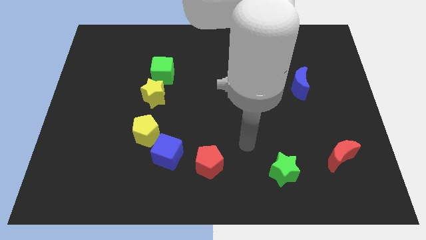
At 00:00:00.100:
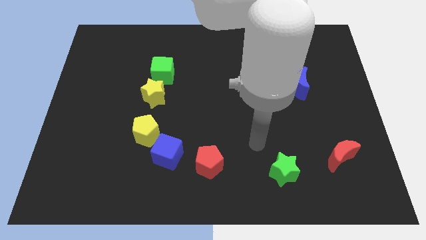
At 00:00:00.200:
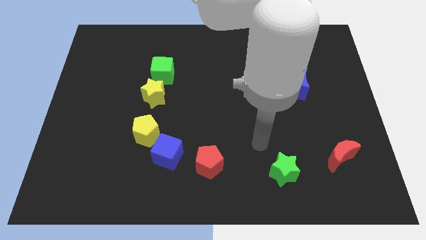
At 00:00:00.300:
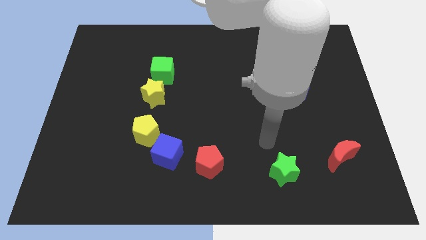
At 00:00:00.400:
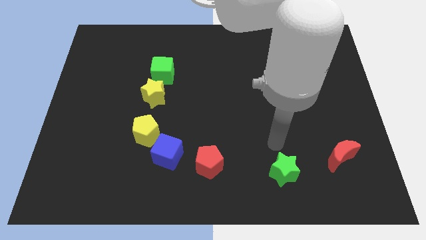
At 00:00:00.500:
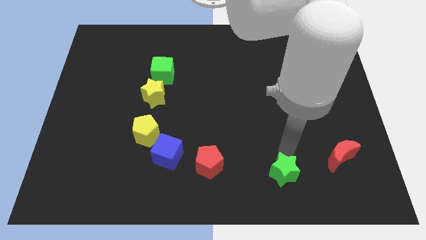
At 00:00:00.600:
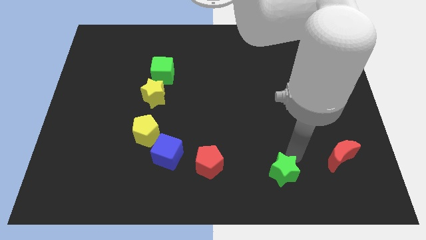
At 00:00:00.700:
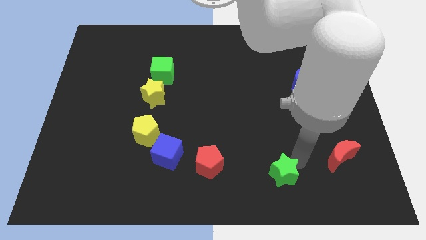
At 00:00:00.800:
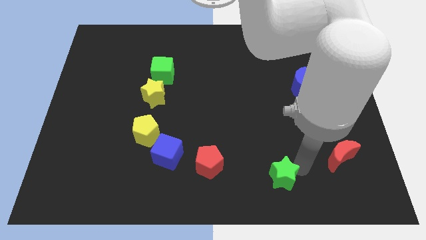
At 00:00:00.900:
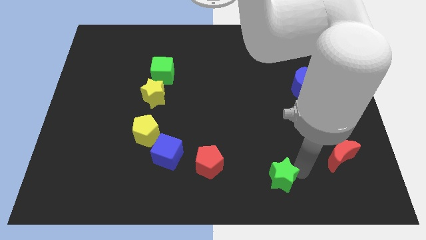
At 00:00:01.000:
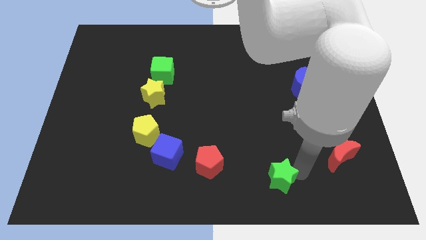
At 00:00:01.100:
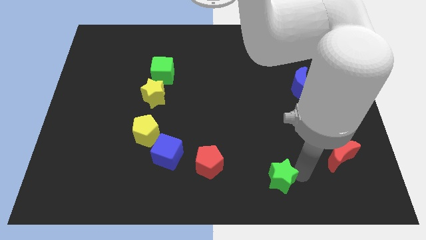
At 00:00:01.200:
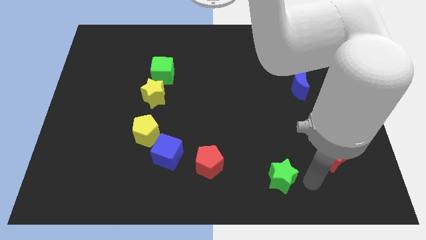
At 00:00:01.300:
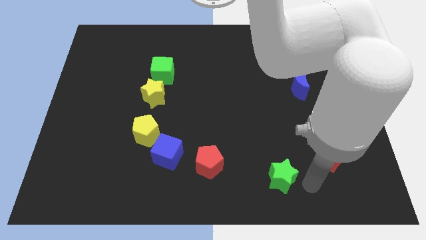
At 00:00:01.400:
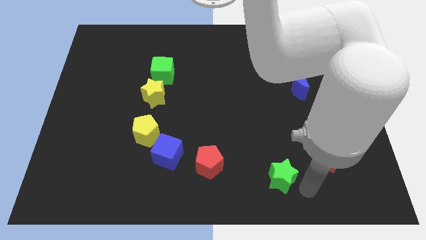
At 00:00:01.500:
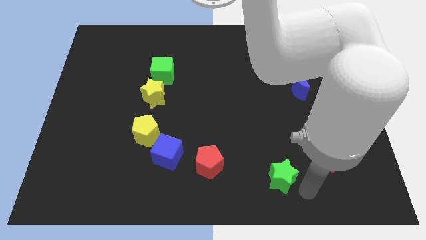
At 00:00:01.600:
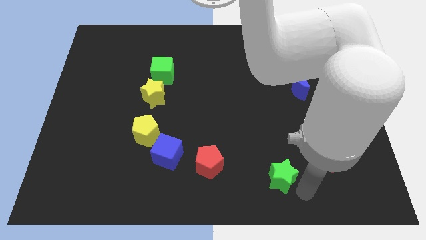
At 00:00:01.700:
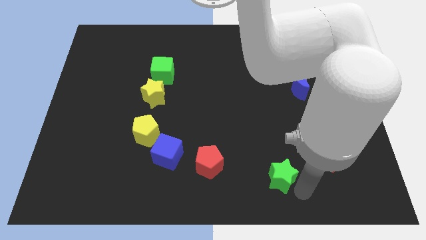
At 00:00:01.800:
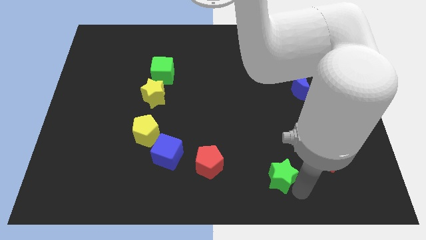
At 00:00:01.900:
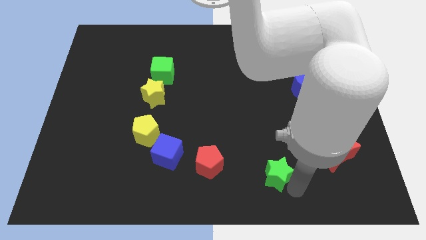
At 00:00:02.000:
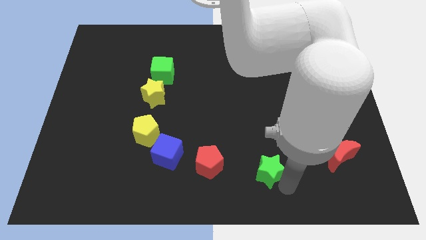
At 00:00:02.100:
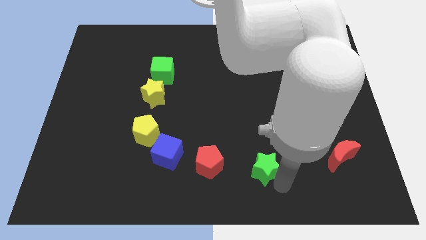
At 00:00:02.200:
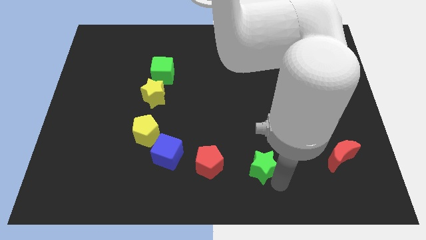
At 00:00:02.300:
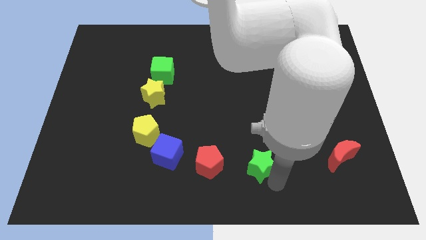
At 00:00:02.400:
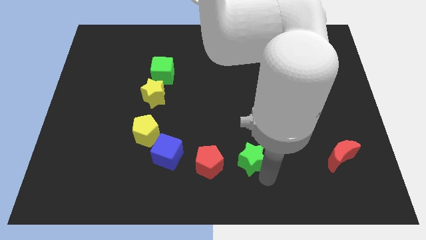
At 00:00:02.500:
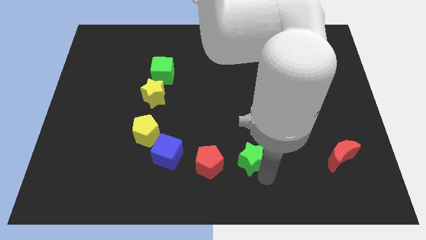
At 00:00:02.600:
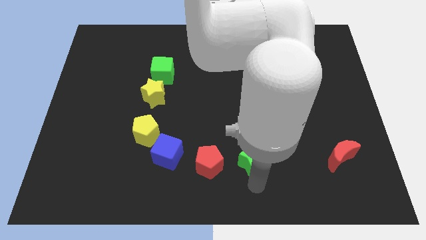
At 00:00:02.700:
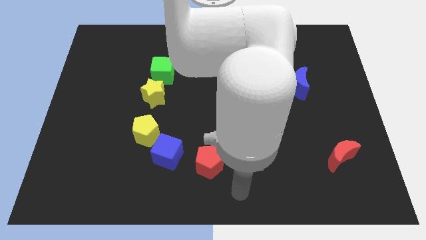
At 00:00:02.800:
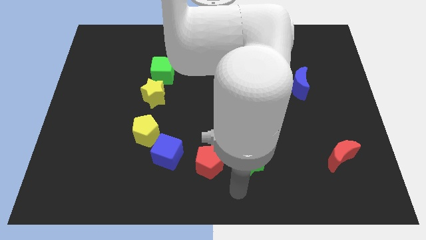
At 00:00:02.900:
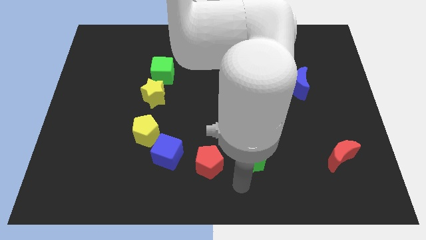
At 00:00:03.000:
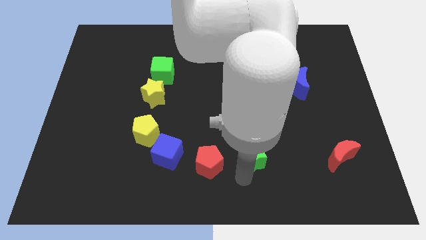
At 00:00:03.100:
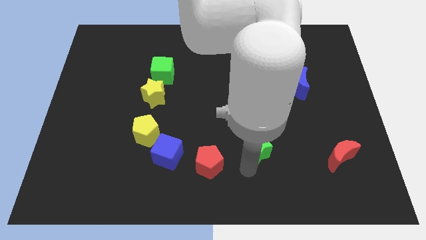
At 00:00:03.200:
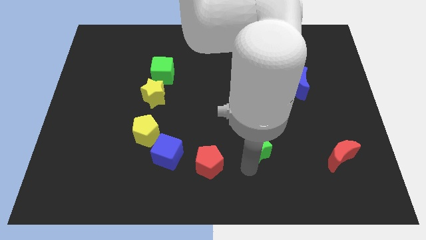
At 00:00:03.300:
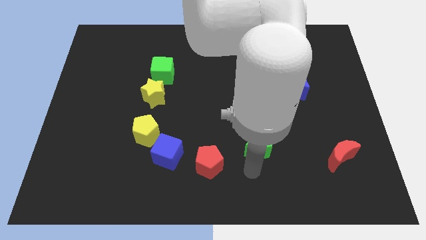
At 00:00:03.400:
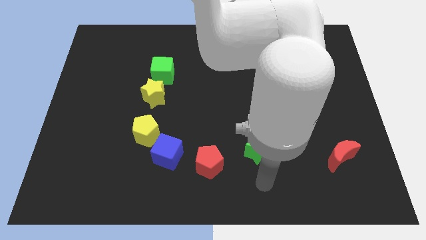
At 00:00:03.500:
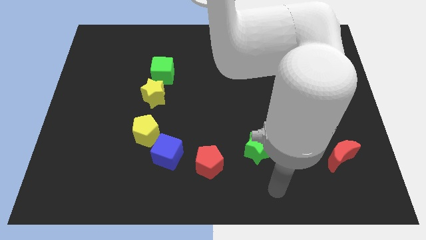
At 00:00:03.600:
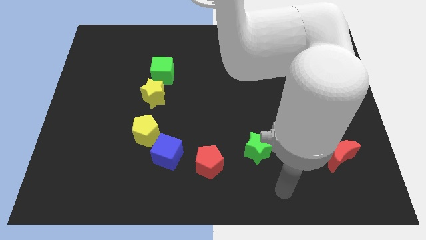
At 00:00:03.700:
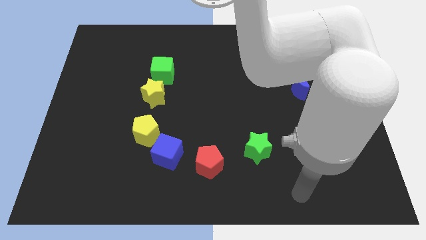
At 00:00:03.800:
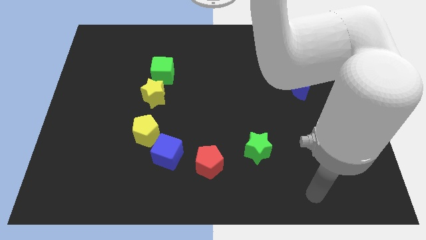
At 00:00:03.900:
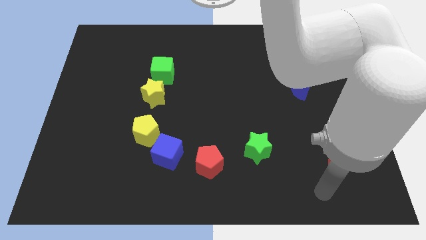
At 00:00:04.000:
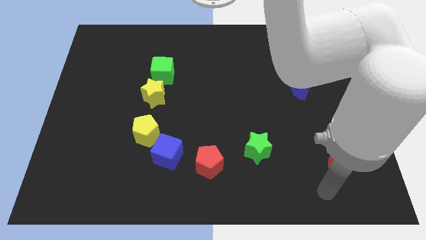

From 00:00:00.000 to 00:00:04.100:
place the green star at the top right of the red pentagon

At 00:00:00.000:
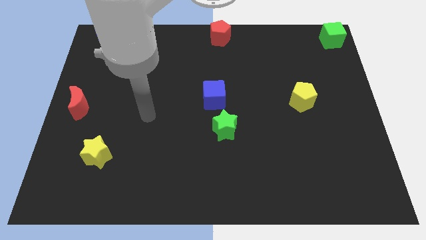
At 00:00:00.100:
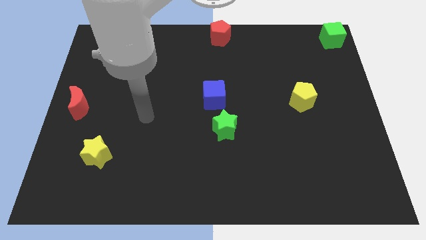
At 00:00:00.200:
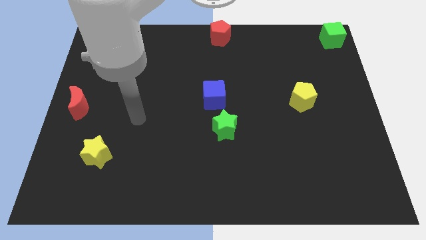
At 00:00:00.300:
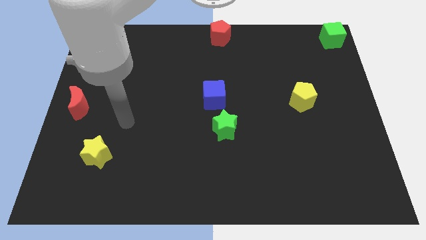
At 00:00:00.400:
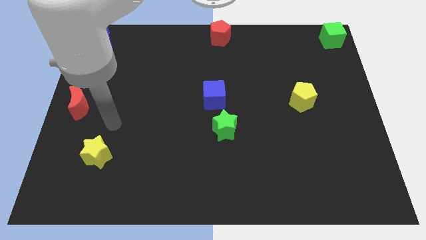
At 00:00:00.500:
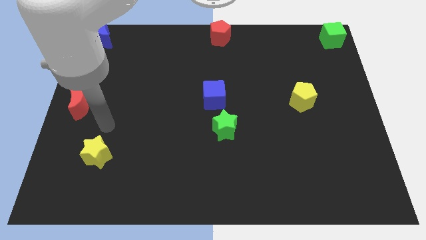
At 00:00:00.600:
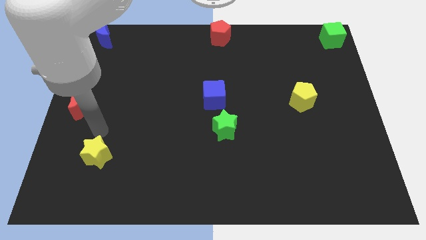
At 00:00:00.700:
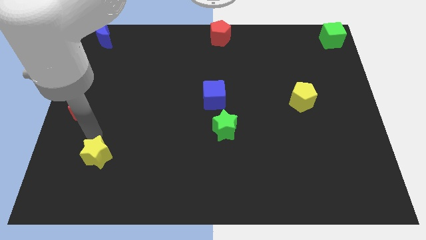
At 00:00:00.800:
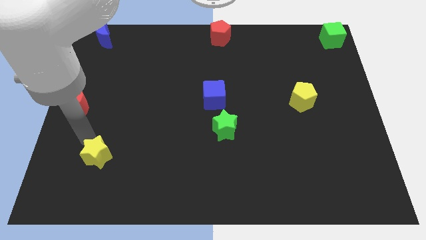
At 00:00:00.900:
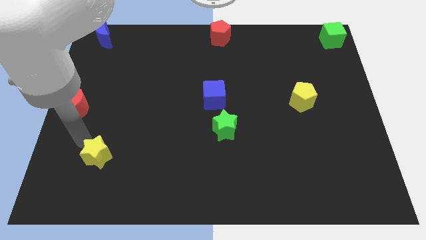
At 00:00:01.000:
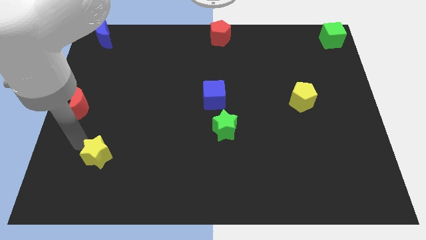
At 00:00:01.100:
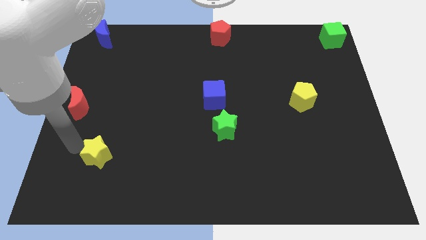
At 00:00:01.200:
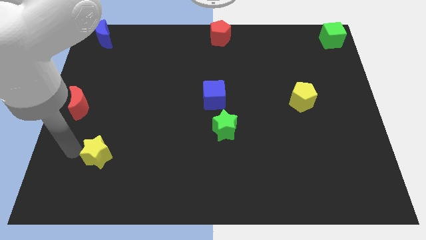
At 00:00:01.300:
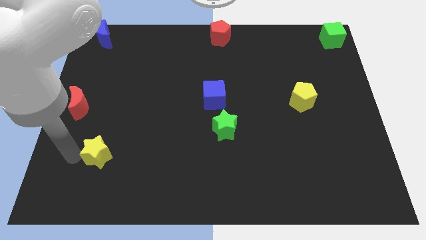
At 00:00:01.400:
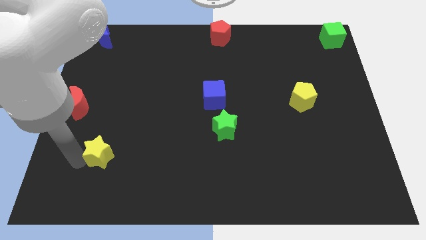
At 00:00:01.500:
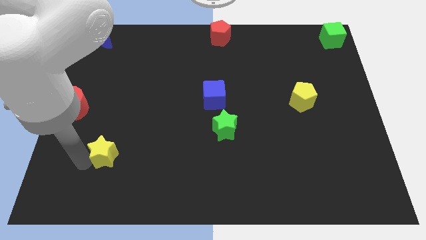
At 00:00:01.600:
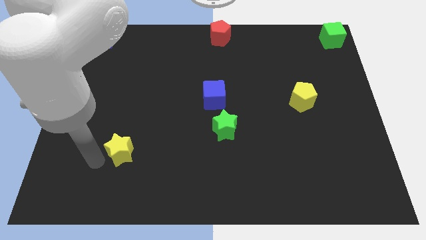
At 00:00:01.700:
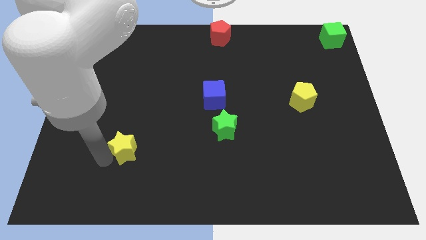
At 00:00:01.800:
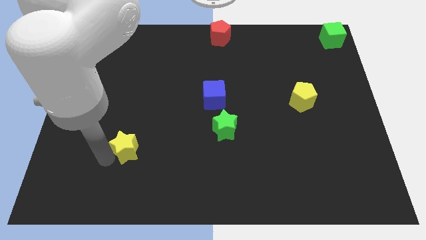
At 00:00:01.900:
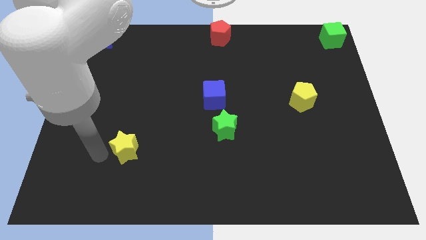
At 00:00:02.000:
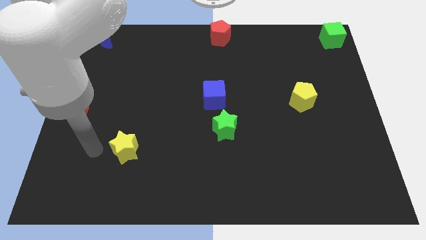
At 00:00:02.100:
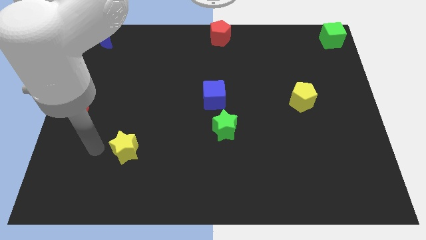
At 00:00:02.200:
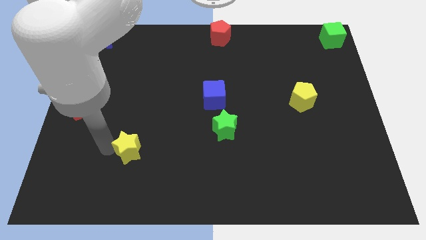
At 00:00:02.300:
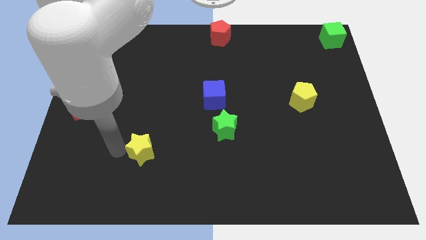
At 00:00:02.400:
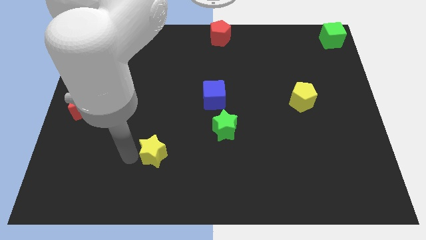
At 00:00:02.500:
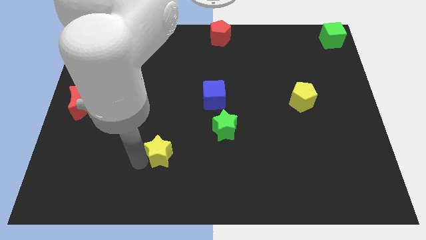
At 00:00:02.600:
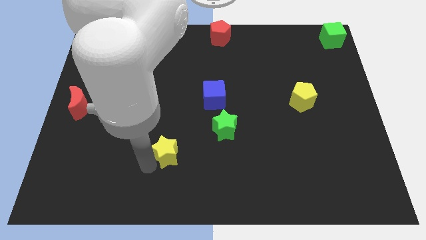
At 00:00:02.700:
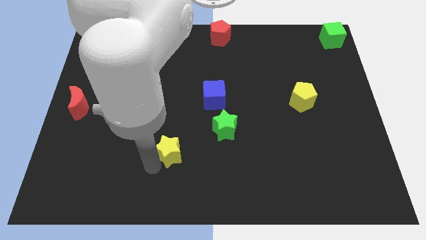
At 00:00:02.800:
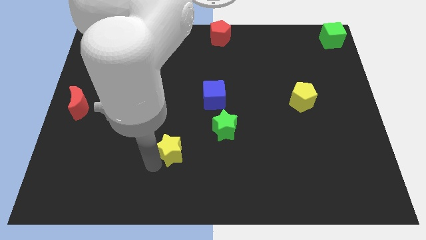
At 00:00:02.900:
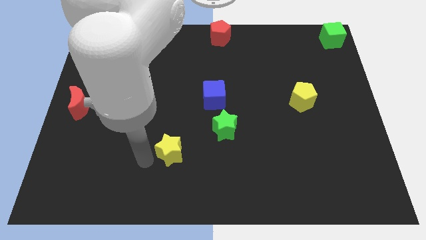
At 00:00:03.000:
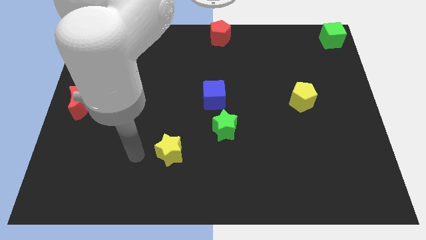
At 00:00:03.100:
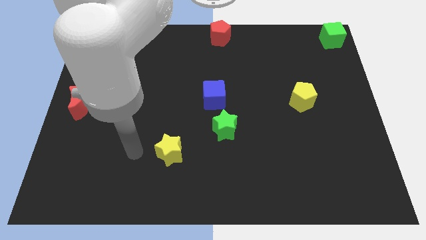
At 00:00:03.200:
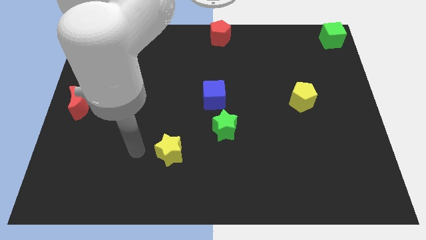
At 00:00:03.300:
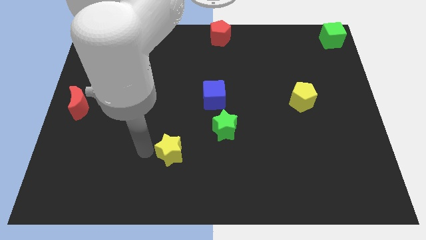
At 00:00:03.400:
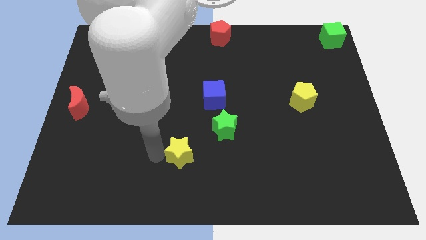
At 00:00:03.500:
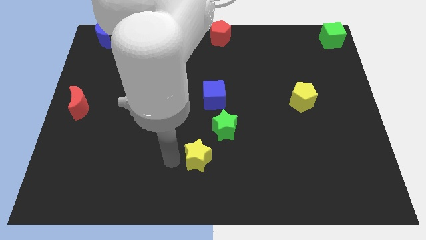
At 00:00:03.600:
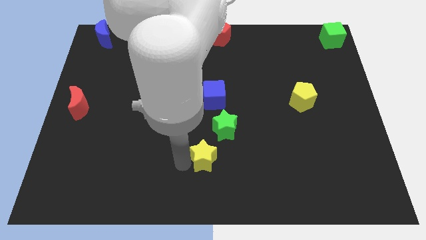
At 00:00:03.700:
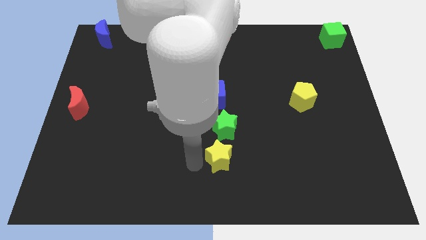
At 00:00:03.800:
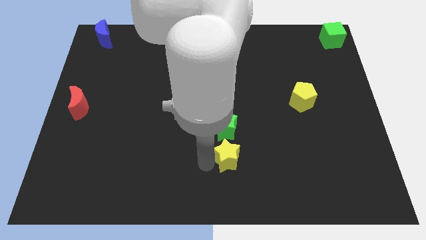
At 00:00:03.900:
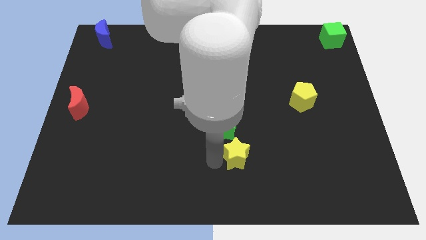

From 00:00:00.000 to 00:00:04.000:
place the yellow star down to the green star

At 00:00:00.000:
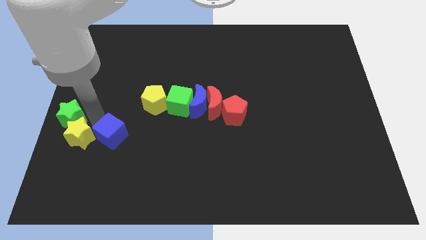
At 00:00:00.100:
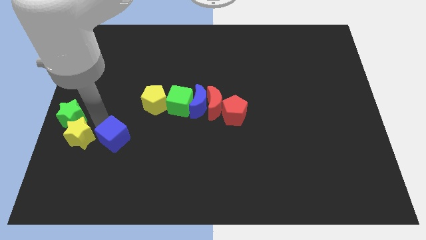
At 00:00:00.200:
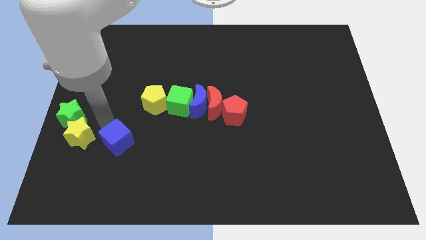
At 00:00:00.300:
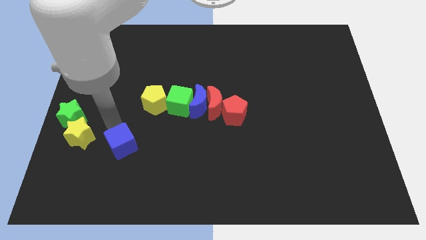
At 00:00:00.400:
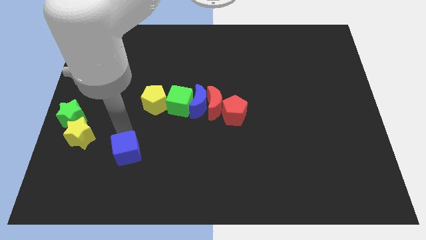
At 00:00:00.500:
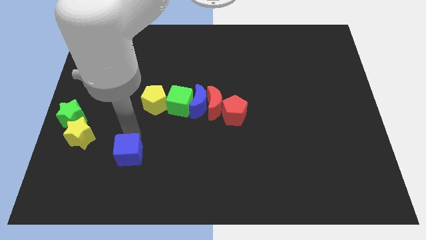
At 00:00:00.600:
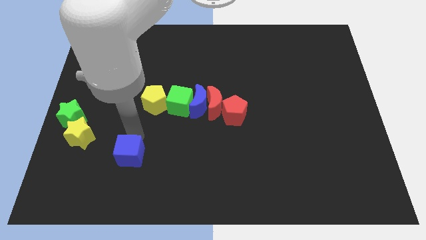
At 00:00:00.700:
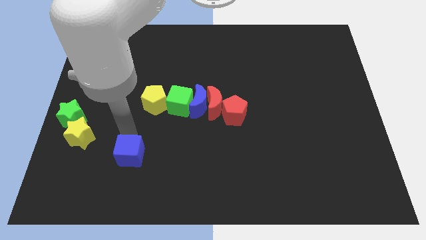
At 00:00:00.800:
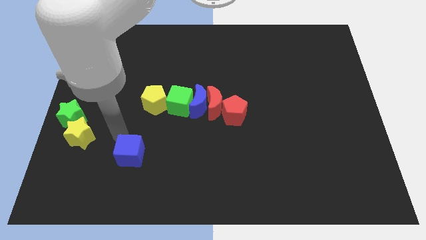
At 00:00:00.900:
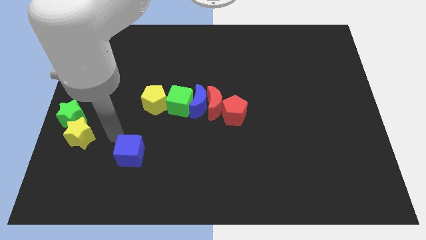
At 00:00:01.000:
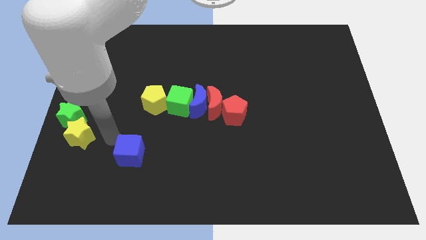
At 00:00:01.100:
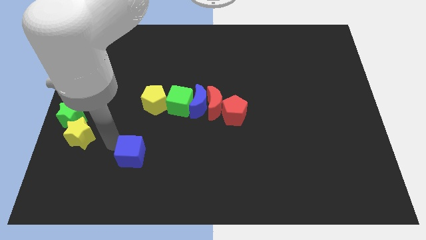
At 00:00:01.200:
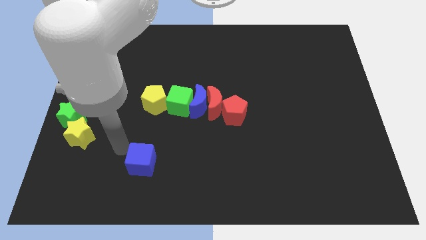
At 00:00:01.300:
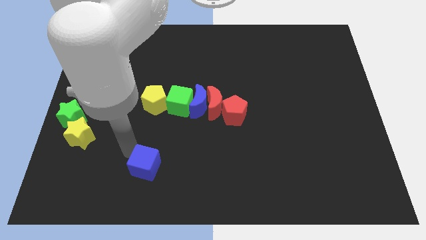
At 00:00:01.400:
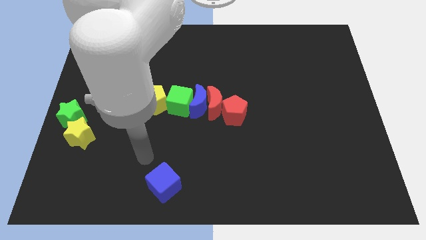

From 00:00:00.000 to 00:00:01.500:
drag the blue cube below the yellow pentagon
